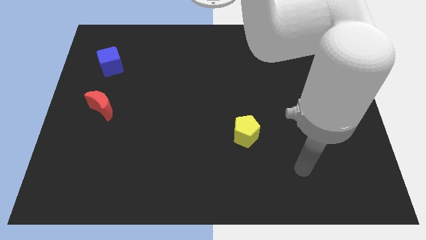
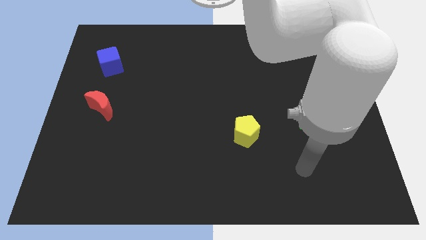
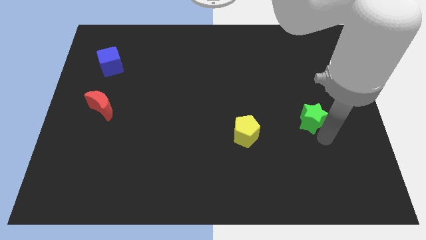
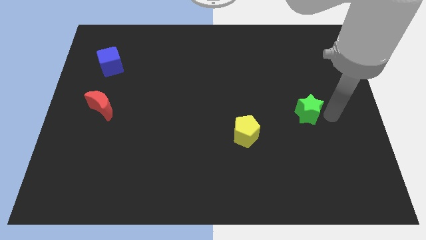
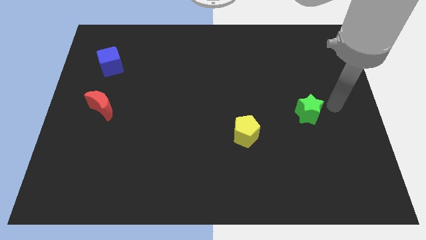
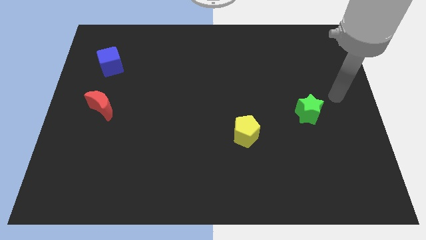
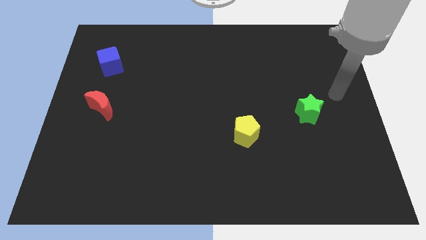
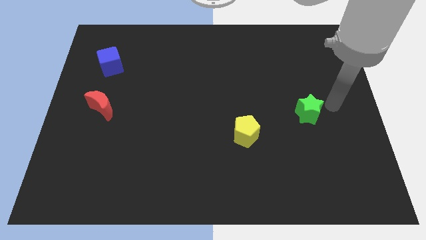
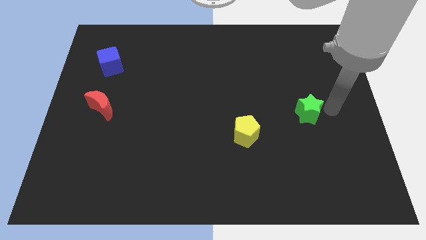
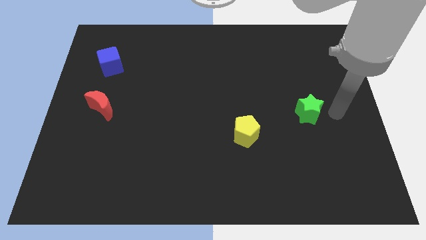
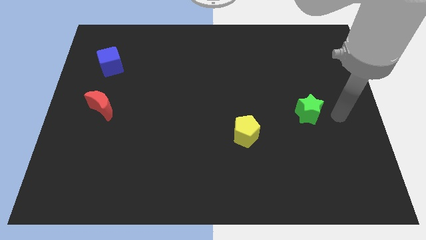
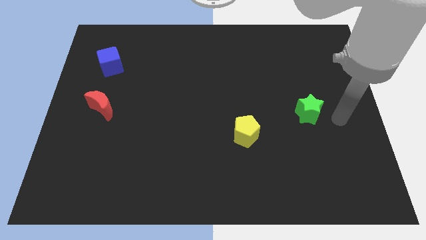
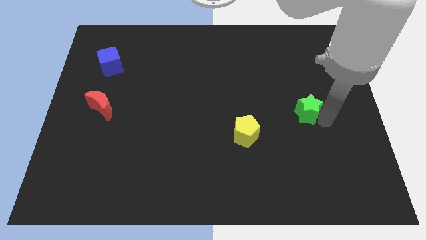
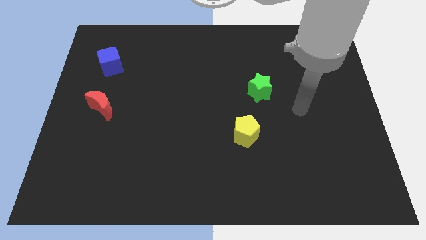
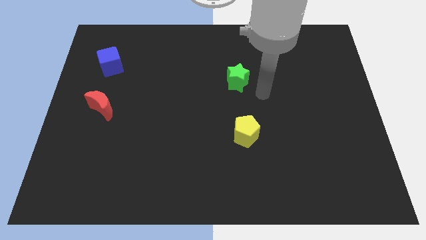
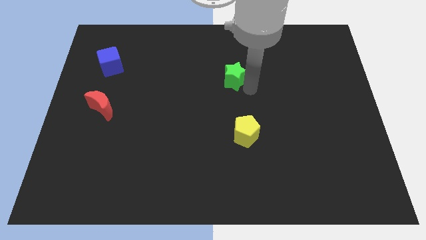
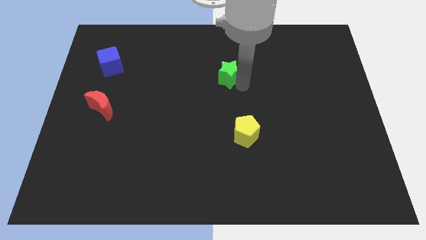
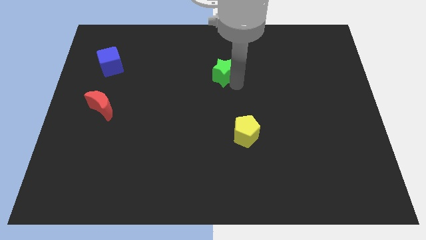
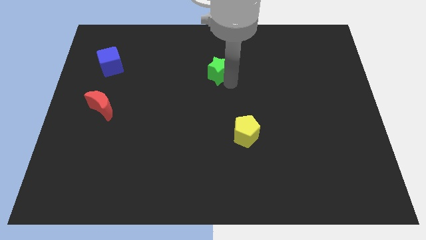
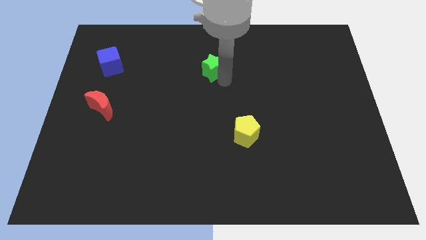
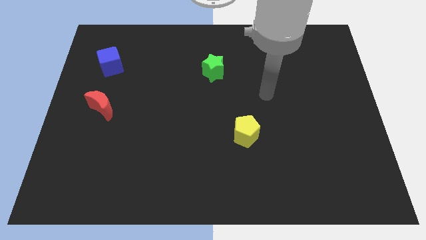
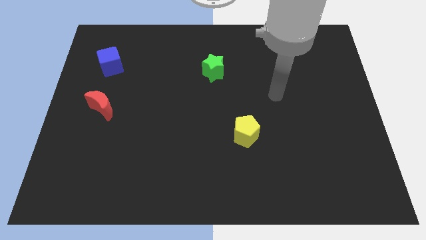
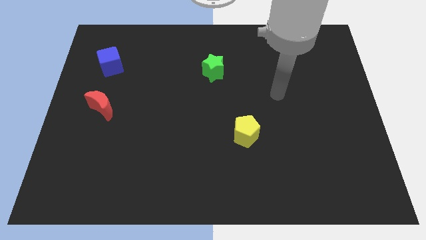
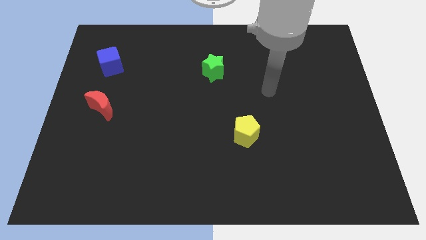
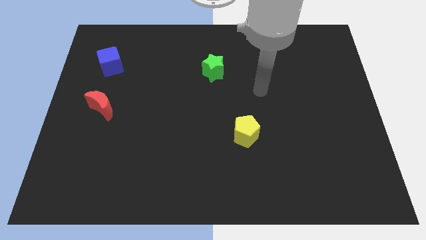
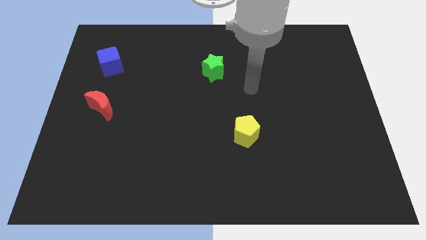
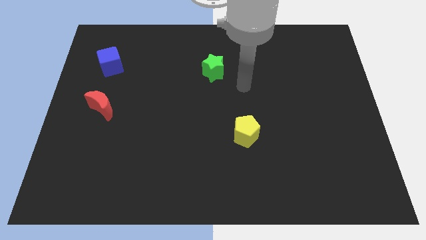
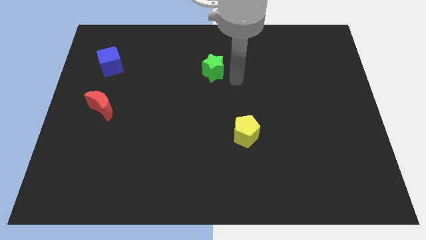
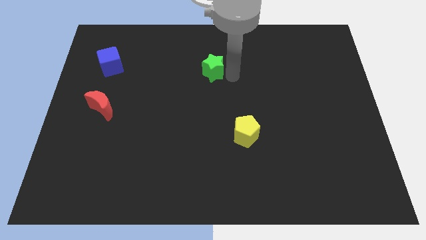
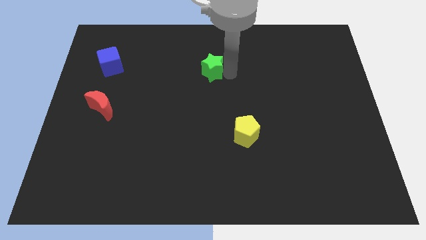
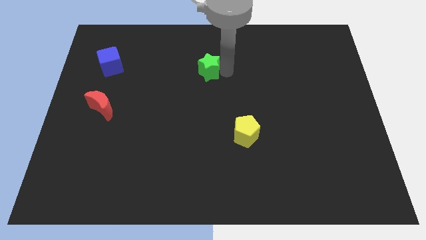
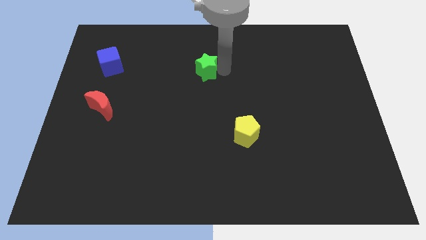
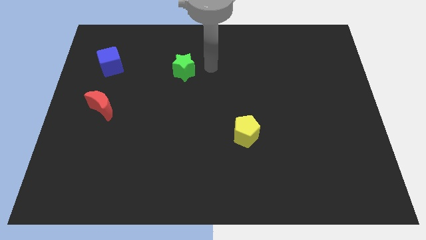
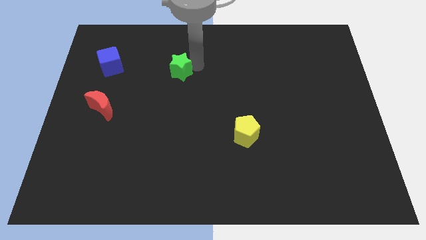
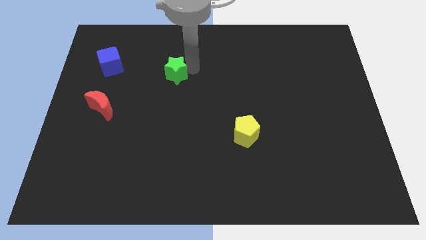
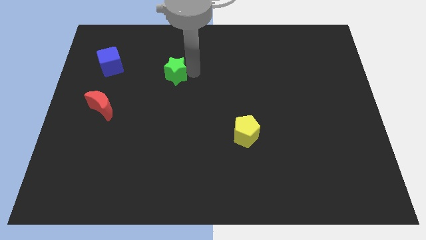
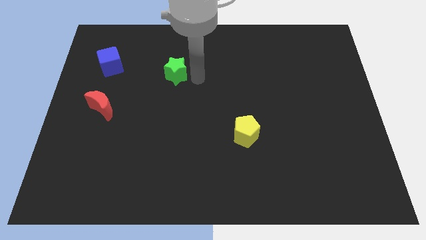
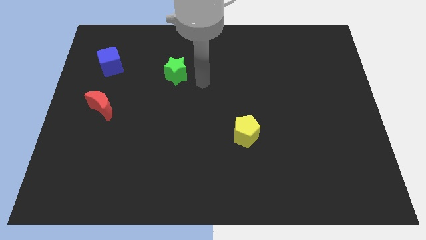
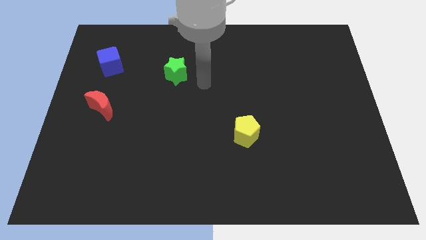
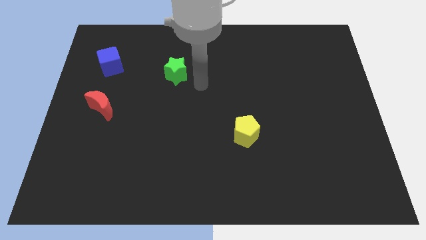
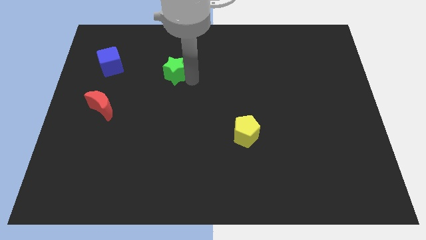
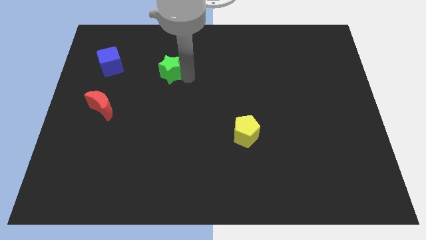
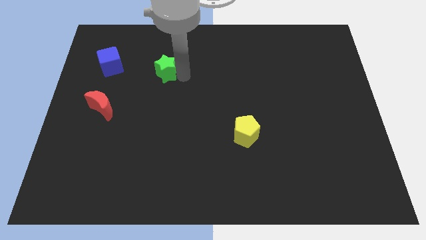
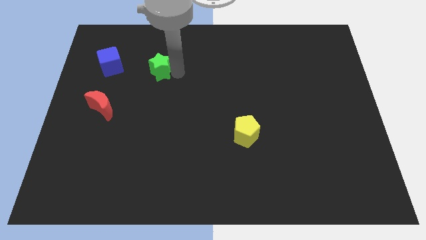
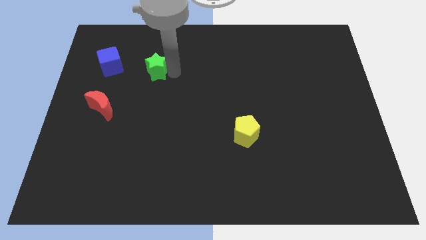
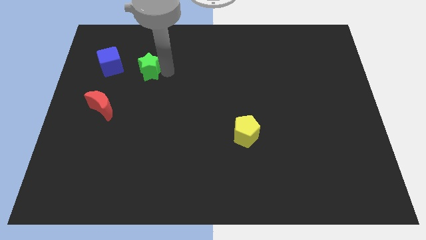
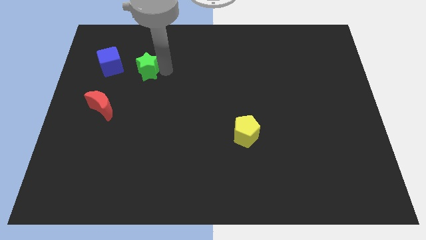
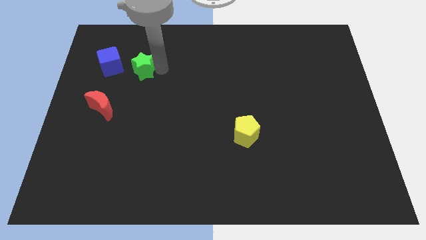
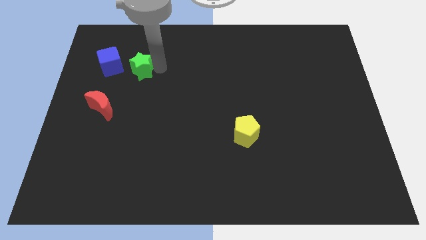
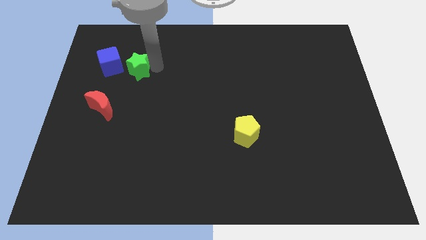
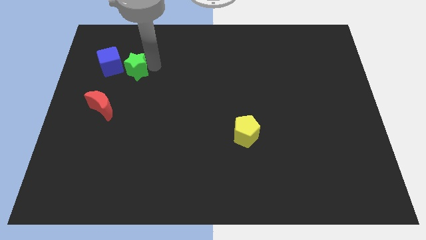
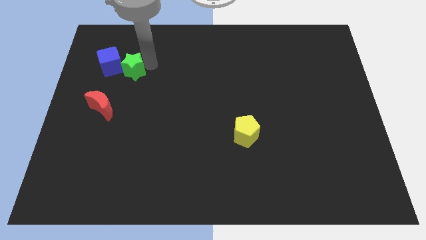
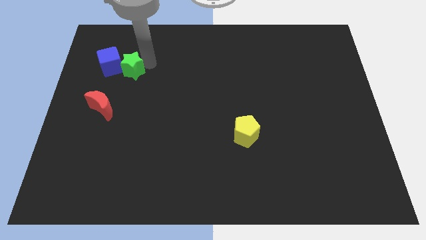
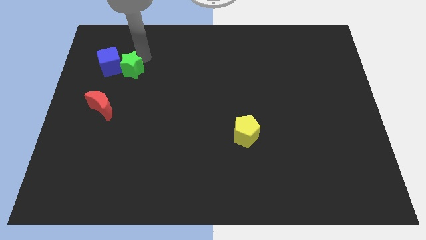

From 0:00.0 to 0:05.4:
push the green star close to the blue cube

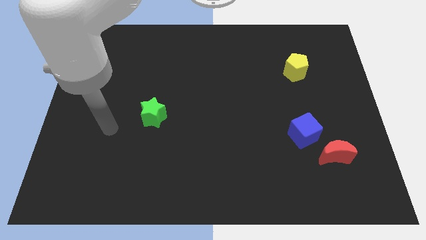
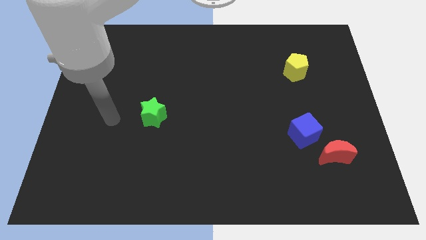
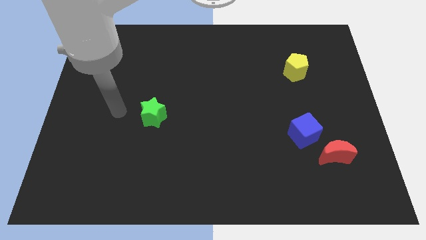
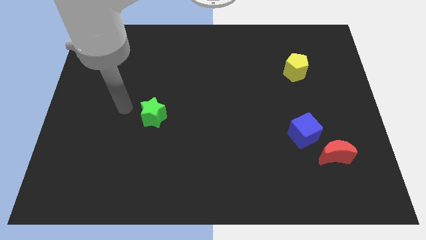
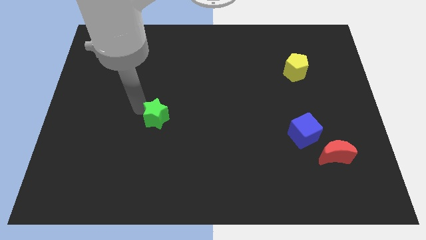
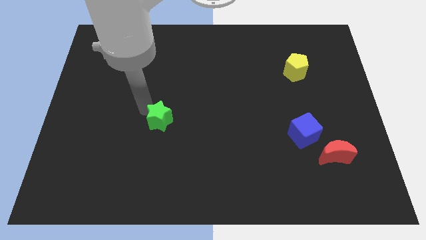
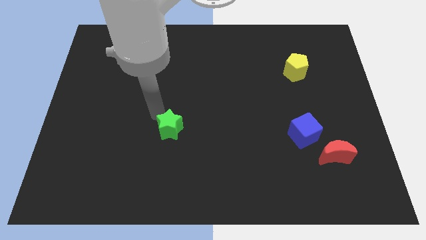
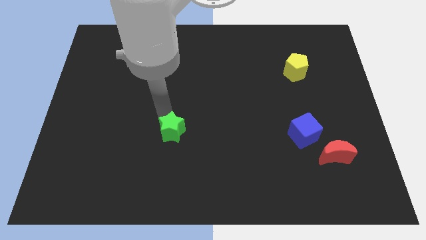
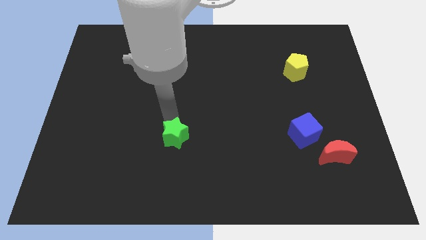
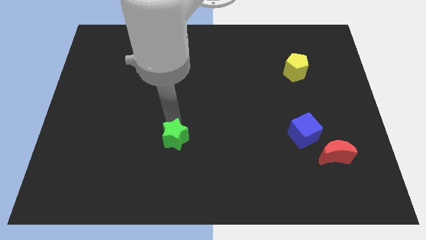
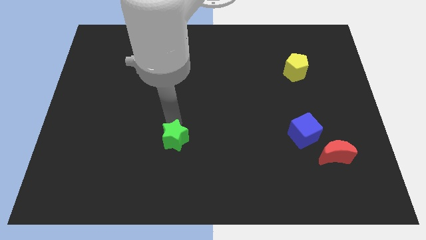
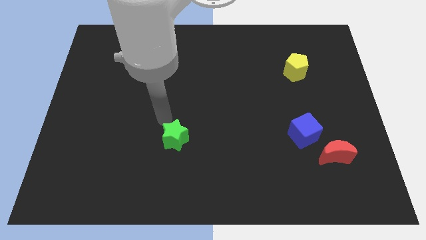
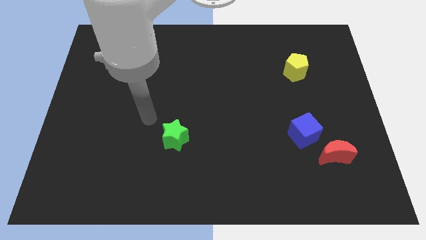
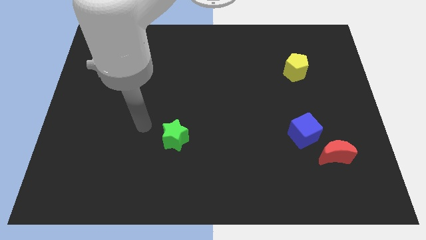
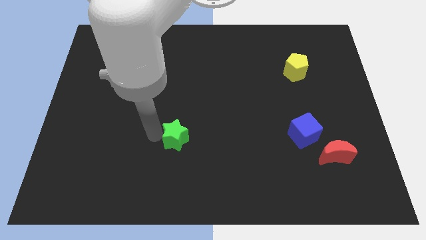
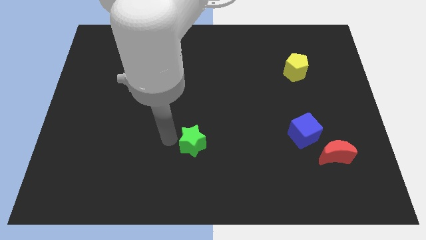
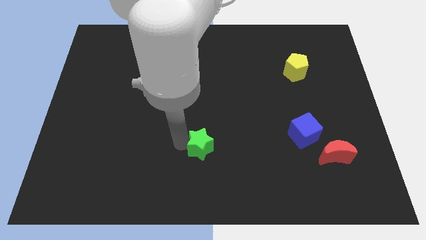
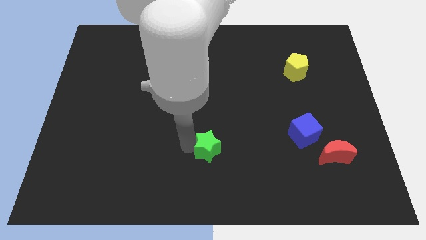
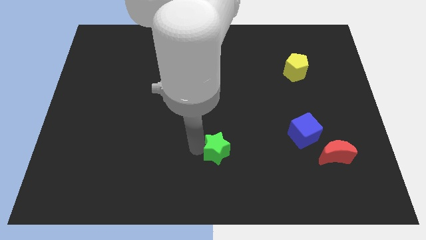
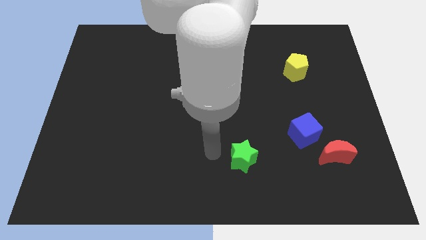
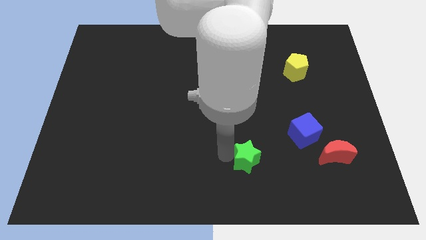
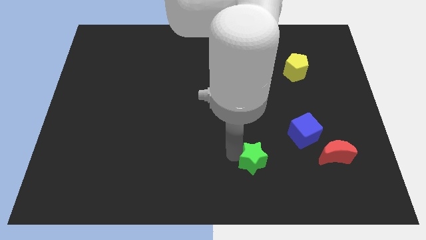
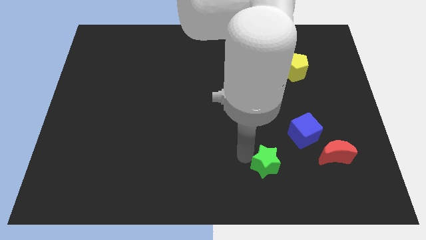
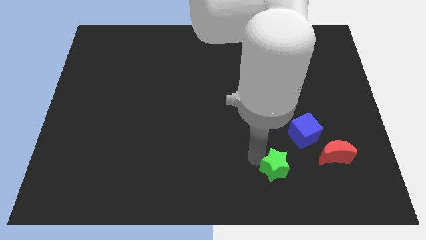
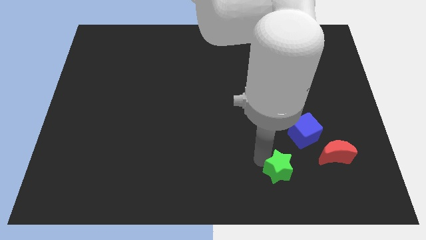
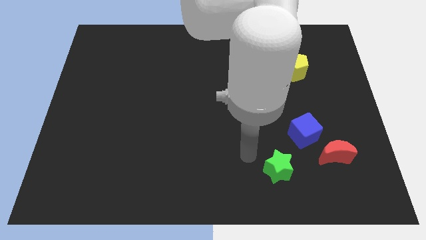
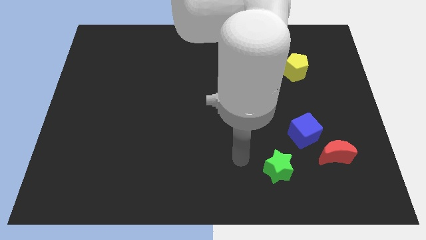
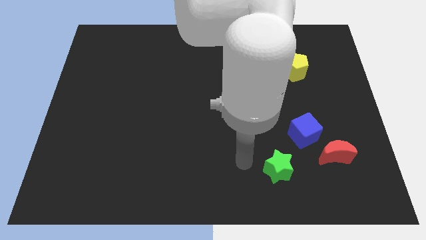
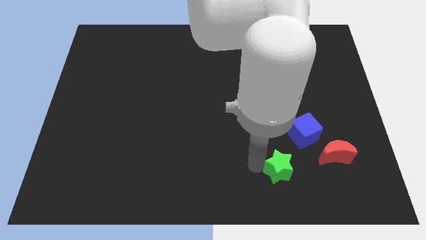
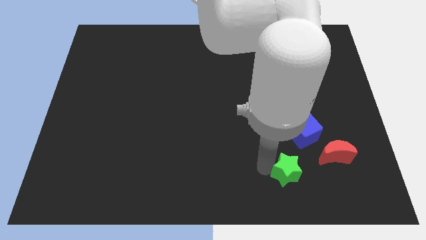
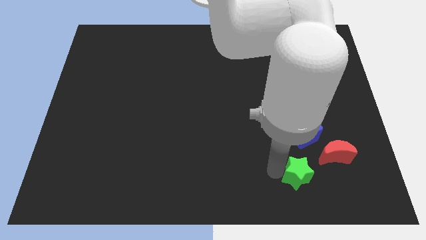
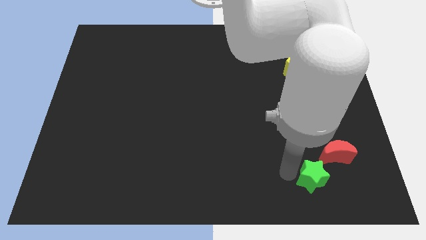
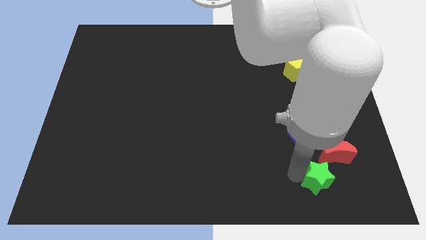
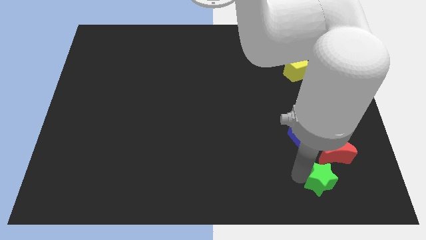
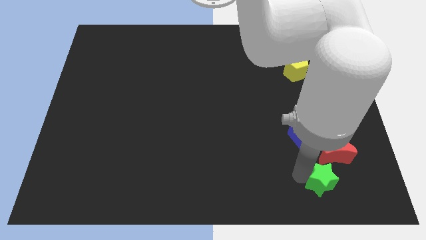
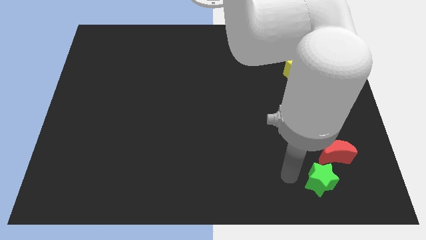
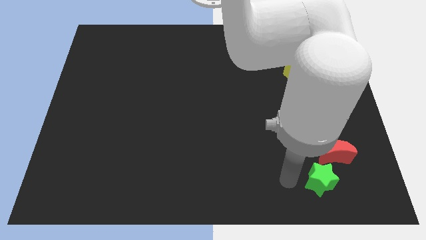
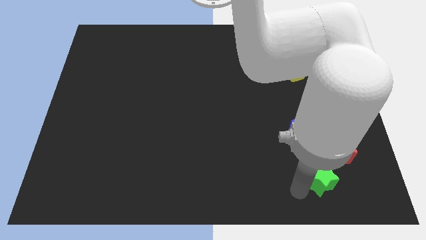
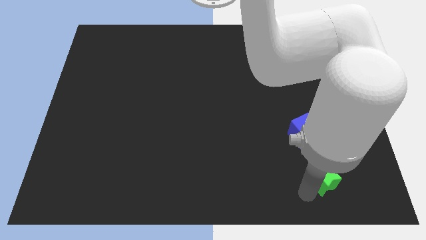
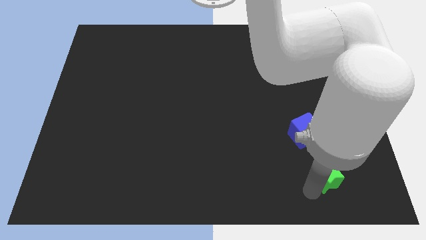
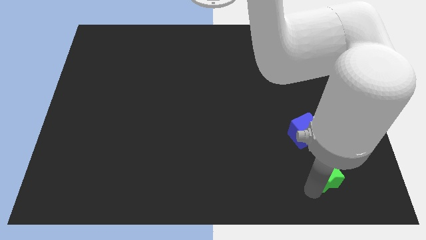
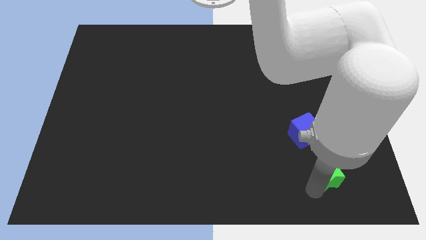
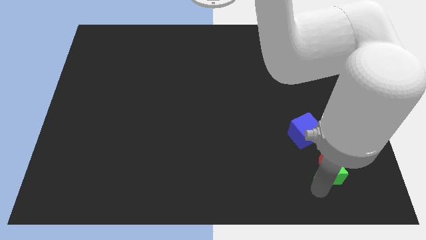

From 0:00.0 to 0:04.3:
put the star next to the moon
